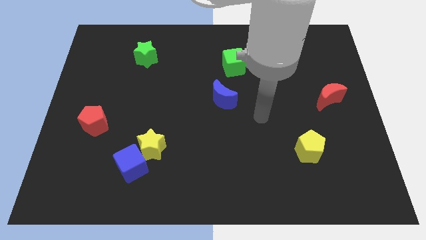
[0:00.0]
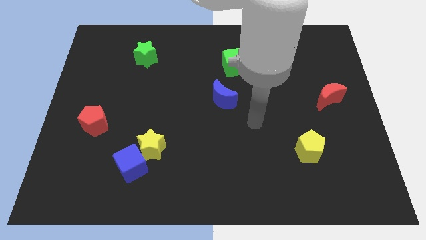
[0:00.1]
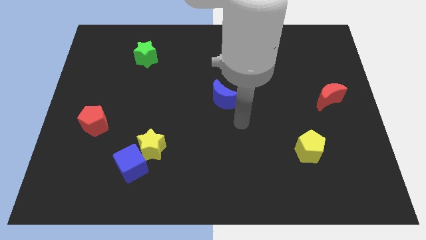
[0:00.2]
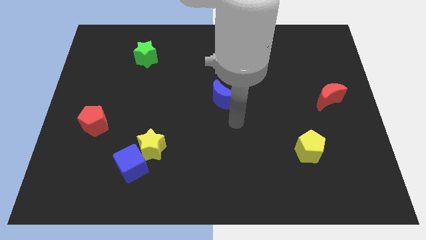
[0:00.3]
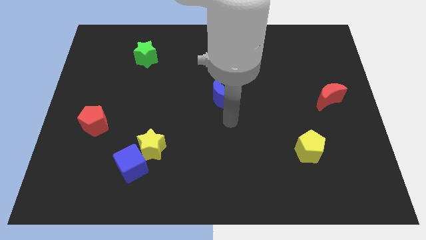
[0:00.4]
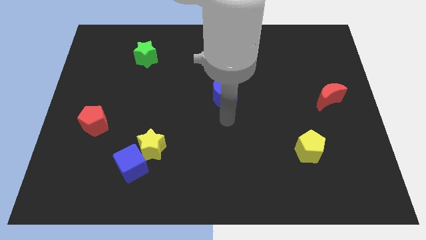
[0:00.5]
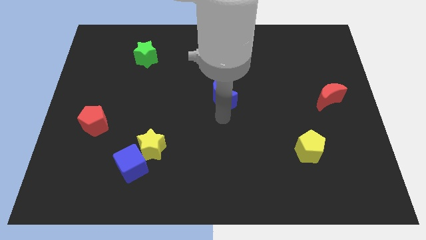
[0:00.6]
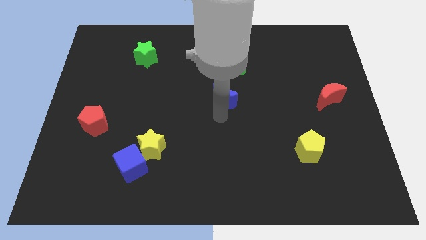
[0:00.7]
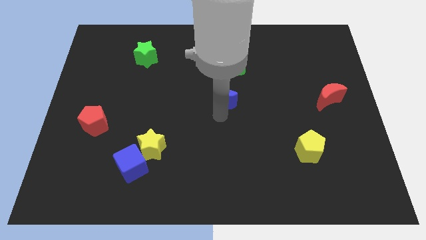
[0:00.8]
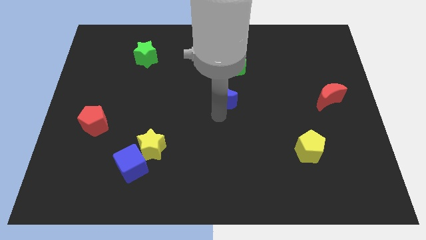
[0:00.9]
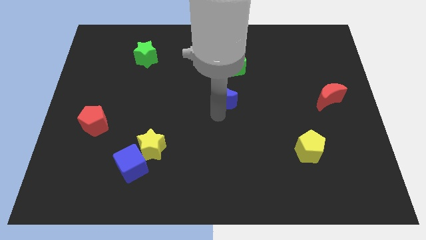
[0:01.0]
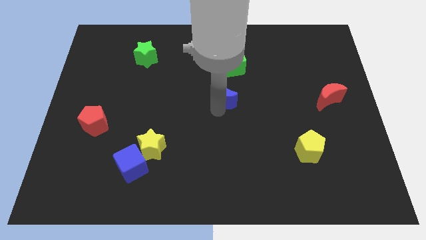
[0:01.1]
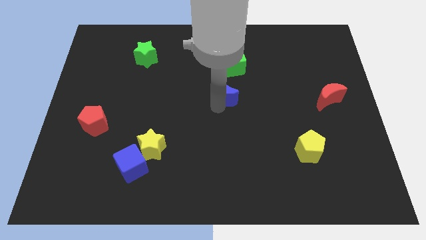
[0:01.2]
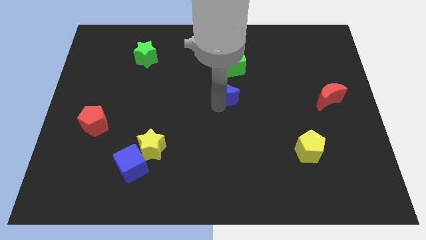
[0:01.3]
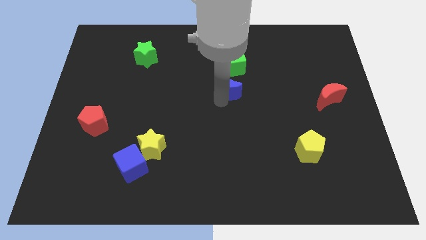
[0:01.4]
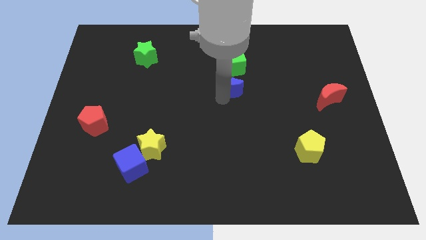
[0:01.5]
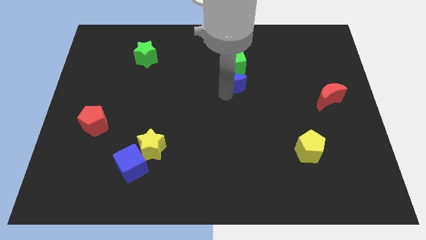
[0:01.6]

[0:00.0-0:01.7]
push blue crescent close to the green cube

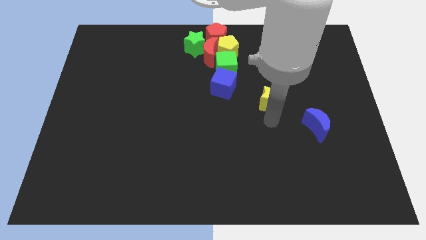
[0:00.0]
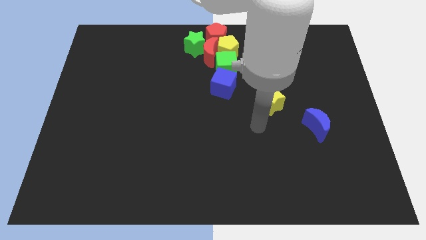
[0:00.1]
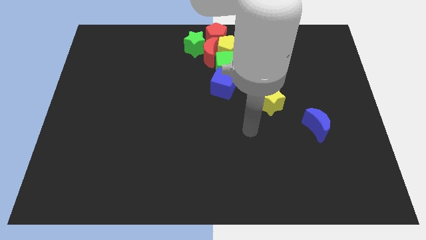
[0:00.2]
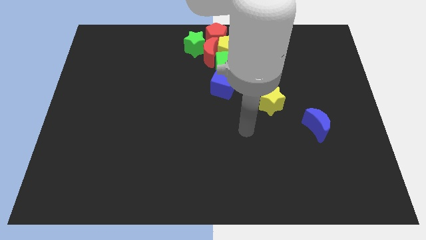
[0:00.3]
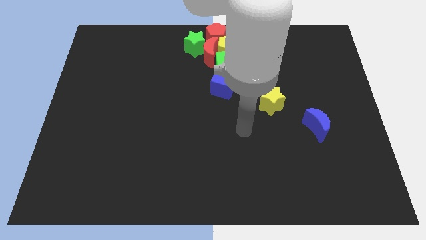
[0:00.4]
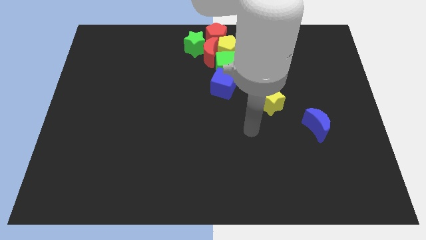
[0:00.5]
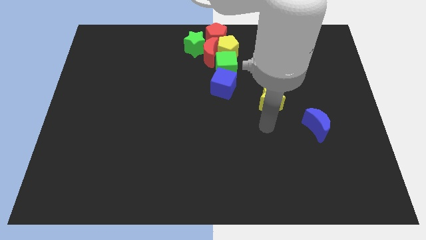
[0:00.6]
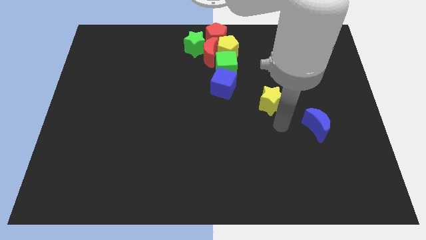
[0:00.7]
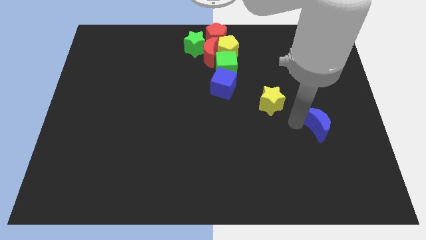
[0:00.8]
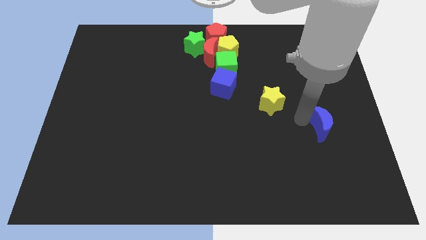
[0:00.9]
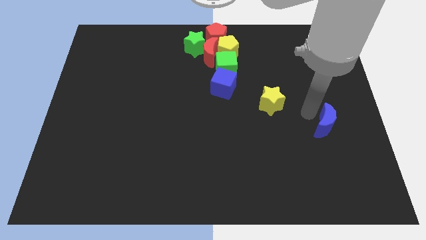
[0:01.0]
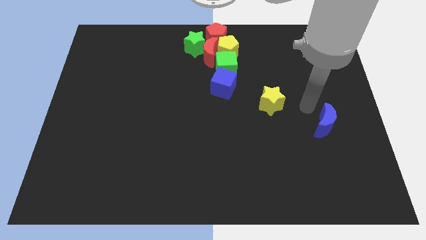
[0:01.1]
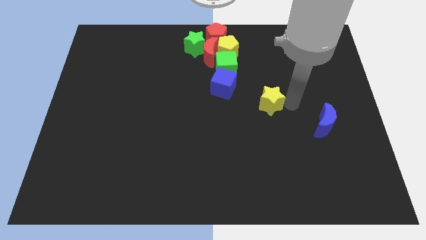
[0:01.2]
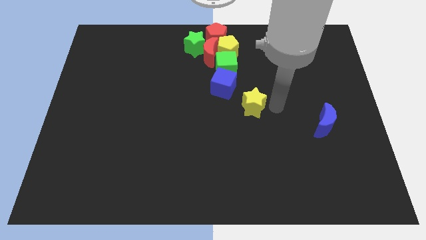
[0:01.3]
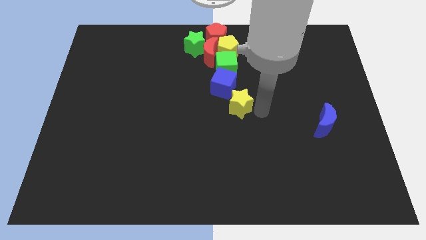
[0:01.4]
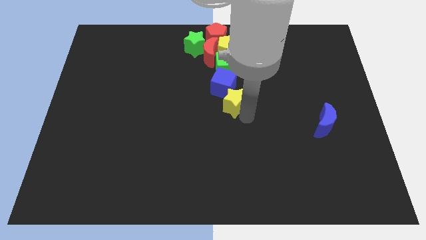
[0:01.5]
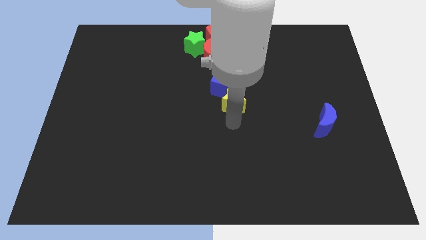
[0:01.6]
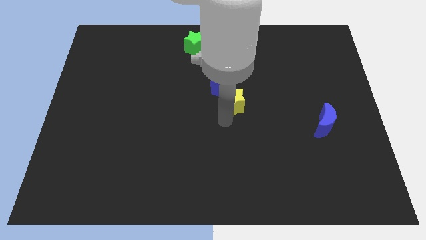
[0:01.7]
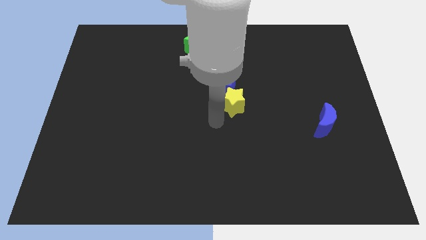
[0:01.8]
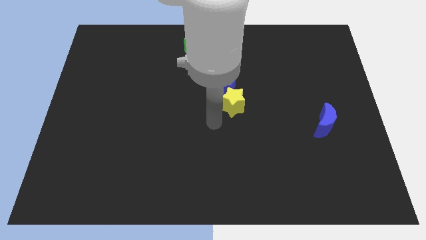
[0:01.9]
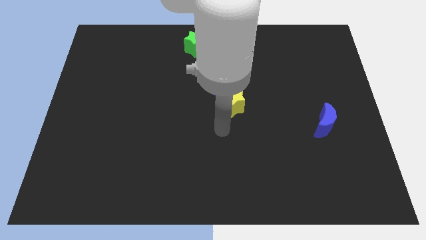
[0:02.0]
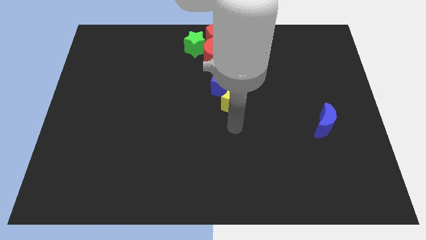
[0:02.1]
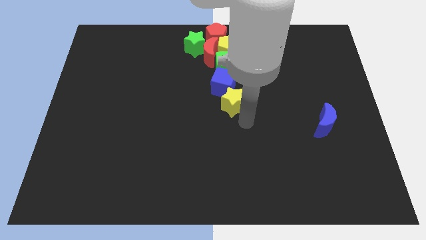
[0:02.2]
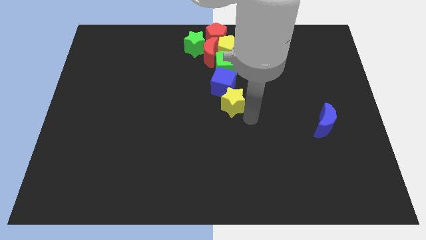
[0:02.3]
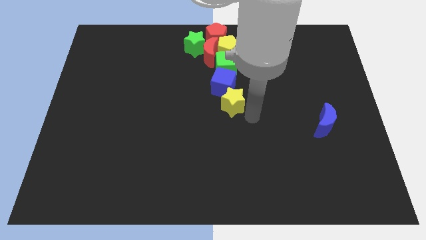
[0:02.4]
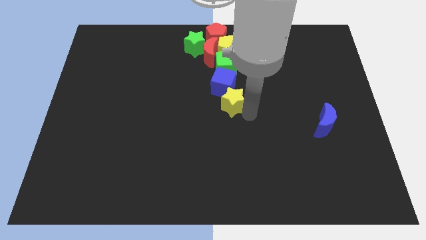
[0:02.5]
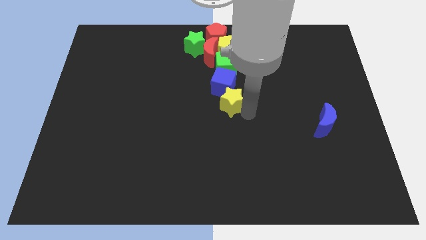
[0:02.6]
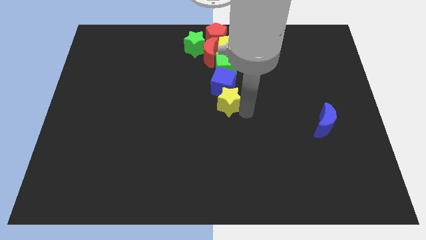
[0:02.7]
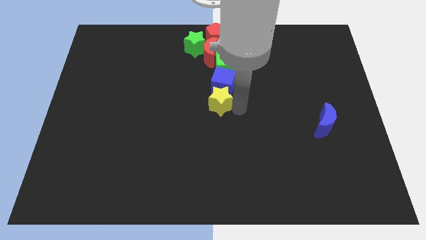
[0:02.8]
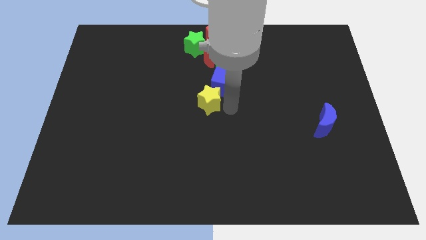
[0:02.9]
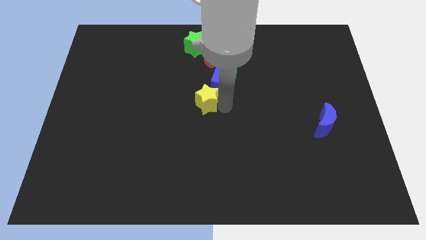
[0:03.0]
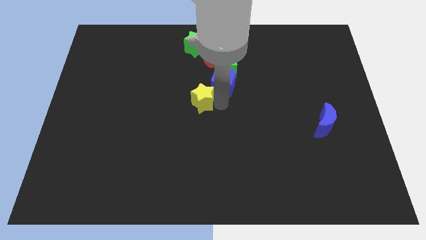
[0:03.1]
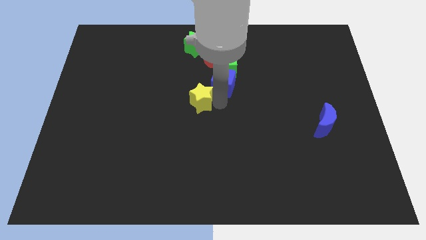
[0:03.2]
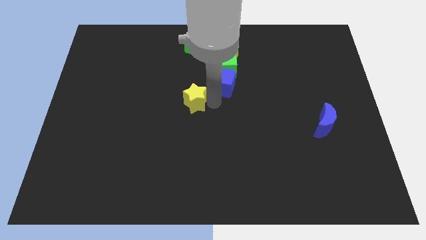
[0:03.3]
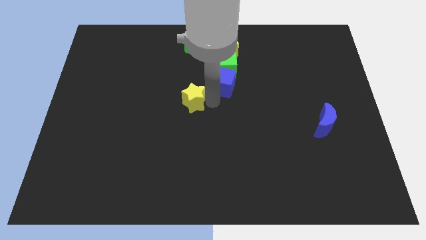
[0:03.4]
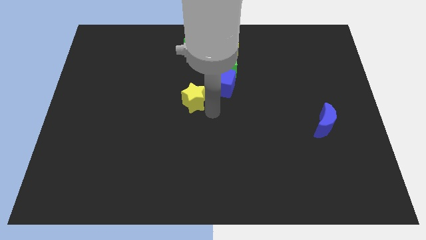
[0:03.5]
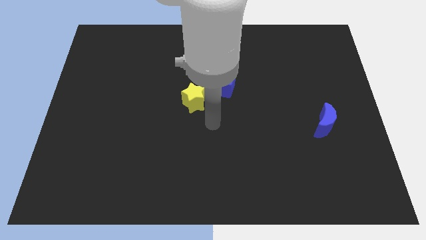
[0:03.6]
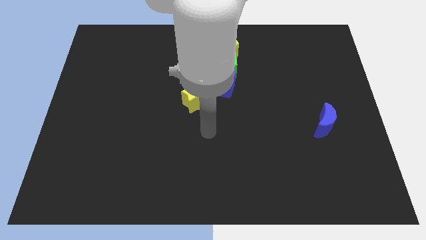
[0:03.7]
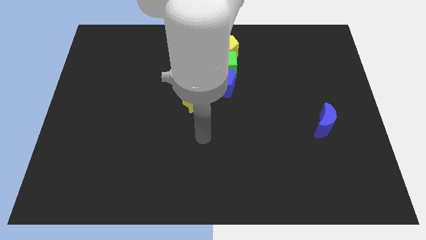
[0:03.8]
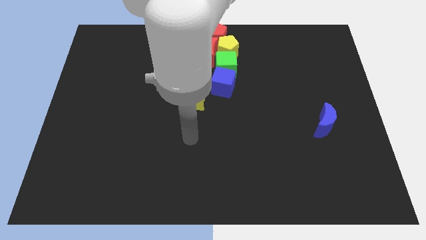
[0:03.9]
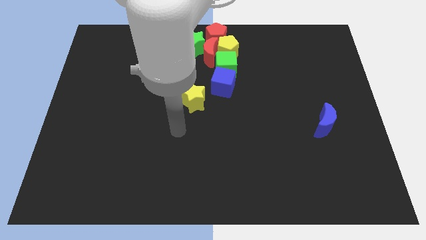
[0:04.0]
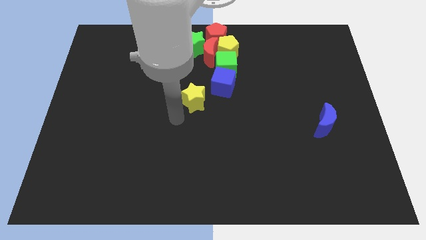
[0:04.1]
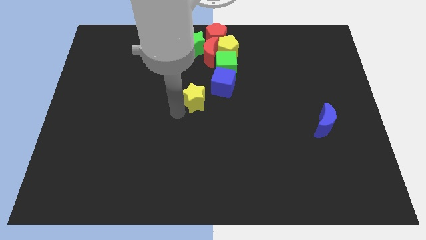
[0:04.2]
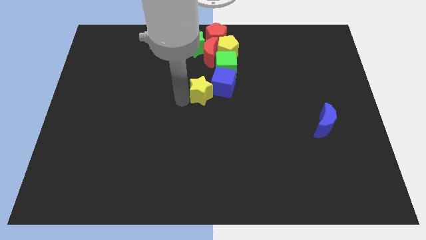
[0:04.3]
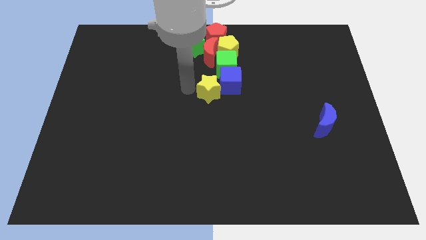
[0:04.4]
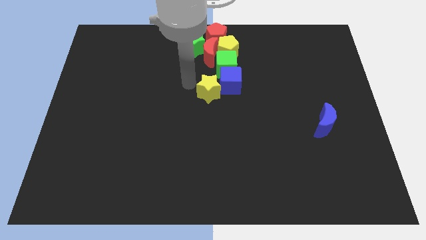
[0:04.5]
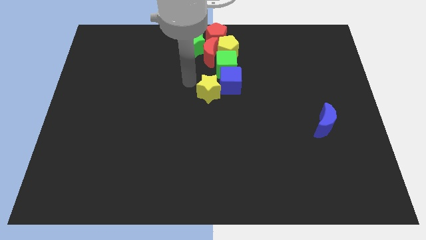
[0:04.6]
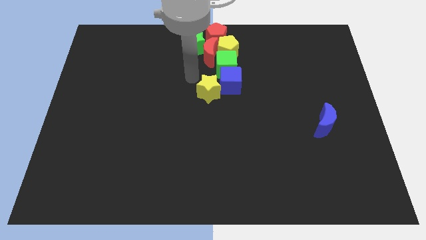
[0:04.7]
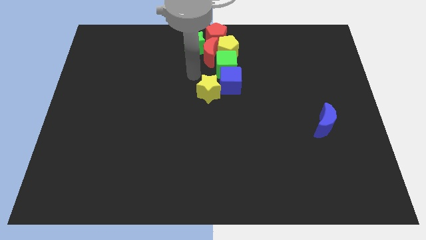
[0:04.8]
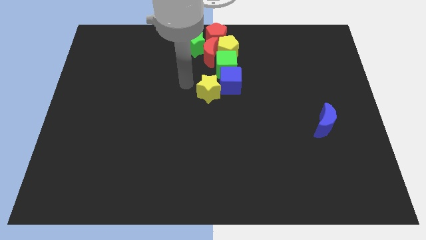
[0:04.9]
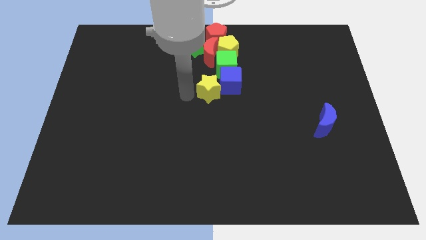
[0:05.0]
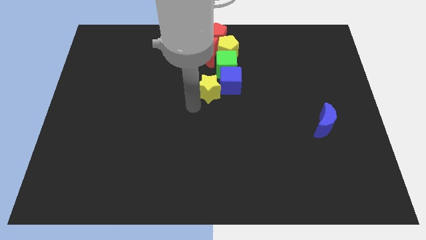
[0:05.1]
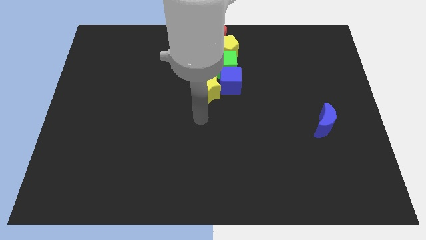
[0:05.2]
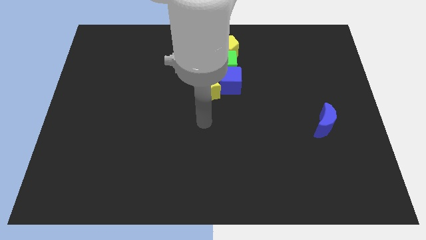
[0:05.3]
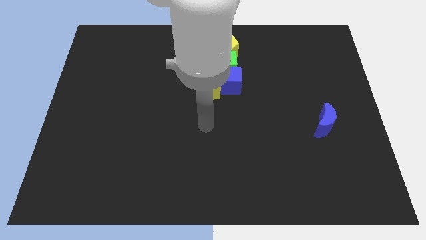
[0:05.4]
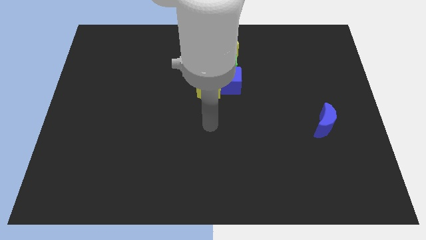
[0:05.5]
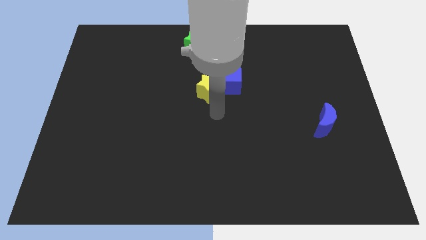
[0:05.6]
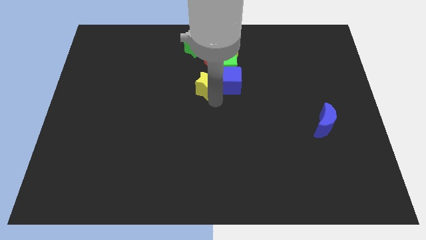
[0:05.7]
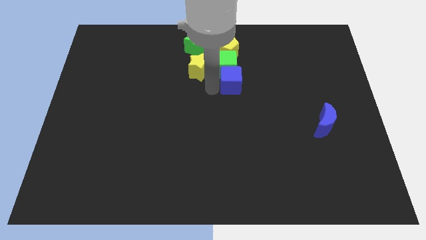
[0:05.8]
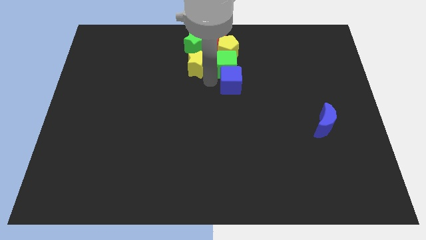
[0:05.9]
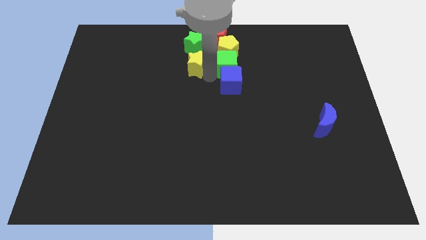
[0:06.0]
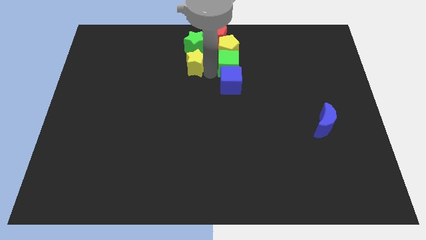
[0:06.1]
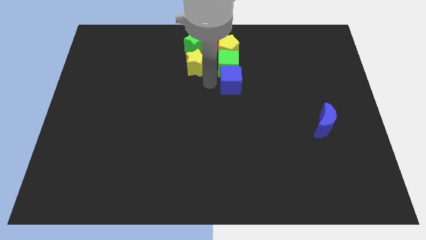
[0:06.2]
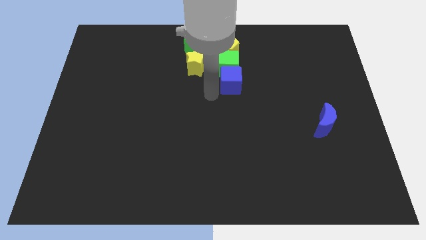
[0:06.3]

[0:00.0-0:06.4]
push the yellow star to the left of the green cube

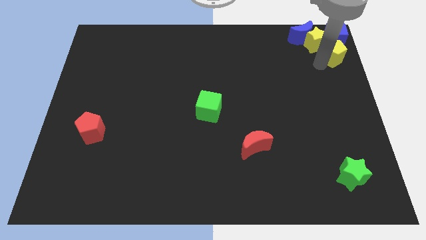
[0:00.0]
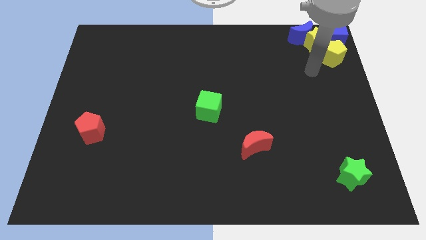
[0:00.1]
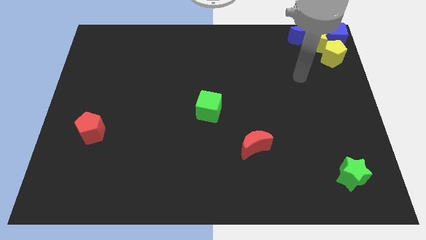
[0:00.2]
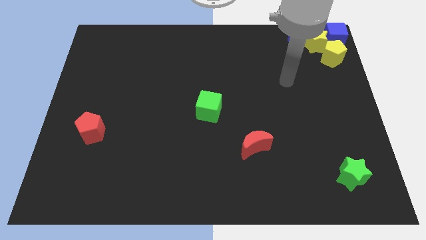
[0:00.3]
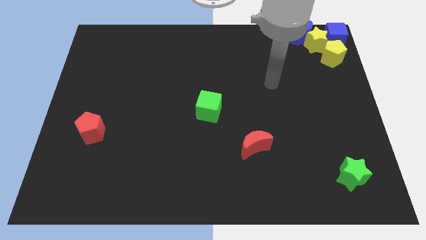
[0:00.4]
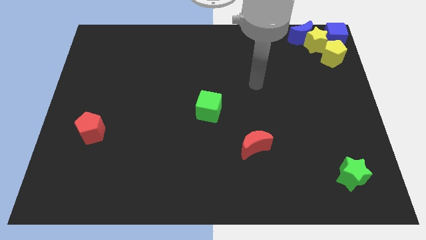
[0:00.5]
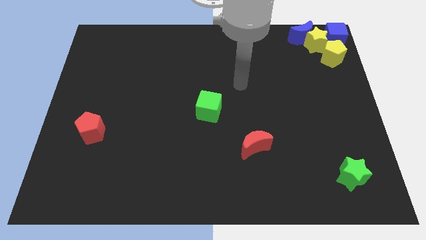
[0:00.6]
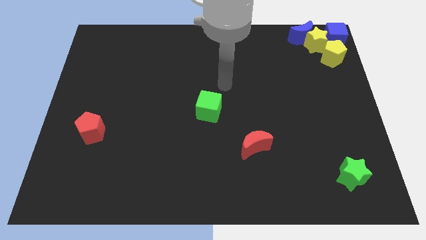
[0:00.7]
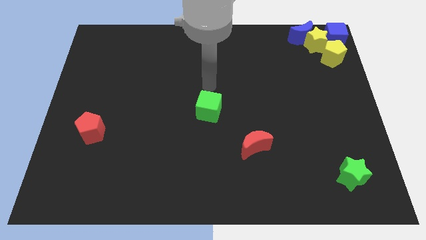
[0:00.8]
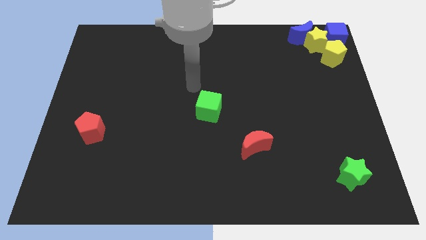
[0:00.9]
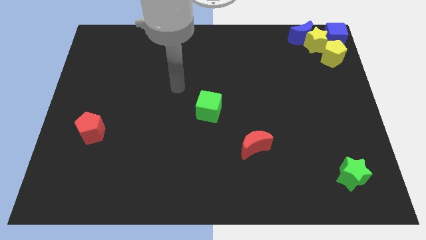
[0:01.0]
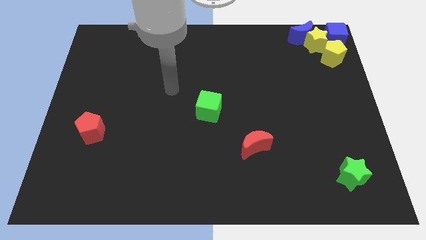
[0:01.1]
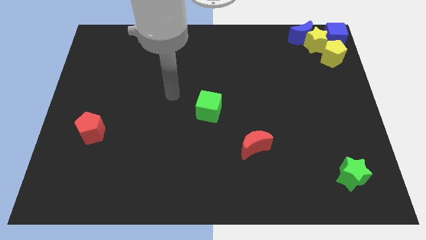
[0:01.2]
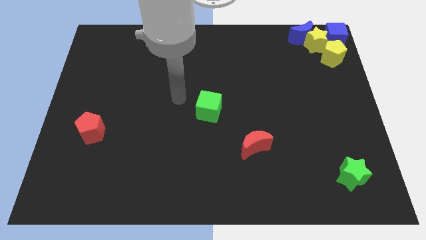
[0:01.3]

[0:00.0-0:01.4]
move your arm away from the yellow pentagon
